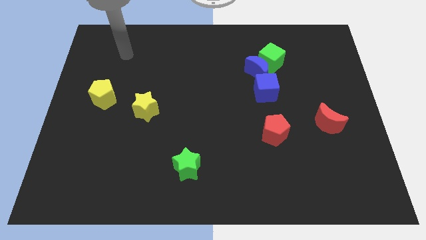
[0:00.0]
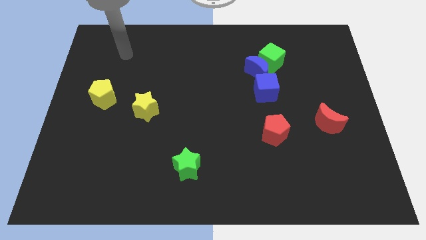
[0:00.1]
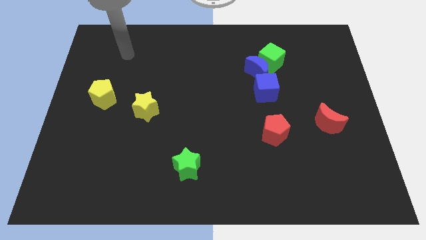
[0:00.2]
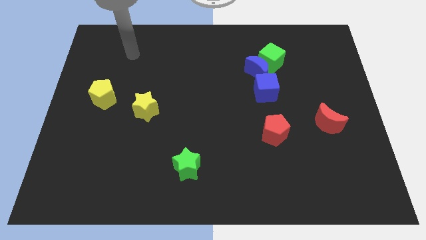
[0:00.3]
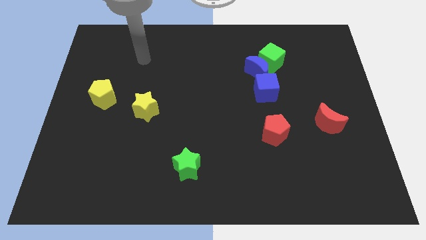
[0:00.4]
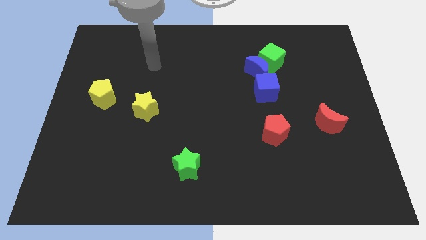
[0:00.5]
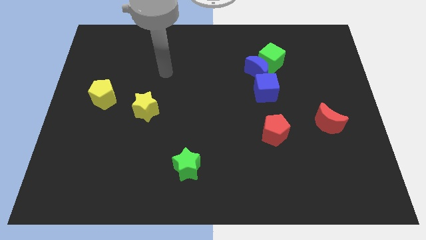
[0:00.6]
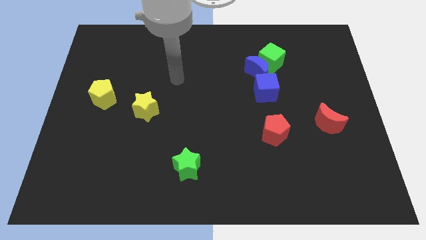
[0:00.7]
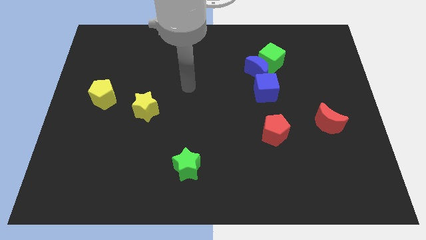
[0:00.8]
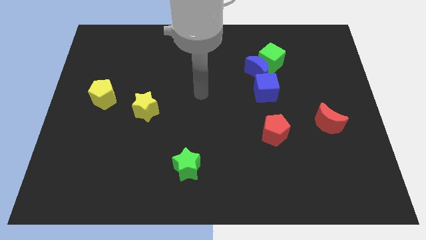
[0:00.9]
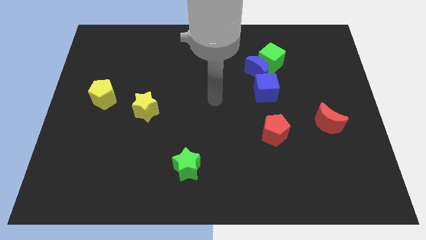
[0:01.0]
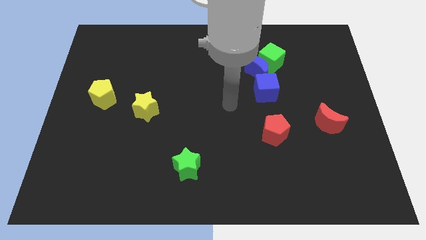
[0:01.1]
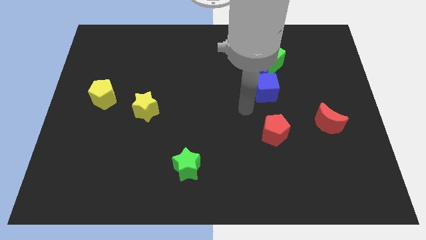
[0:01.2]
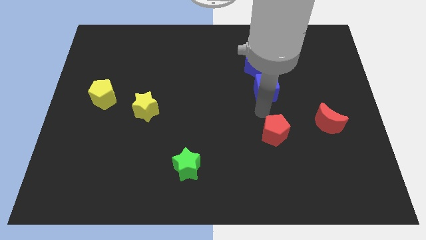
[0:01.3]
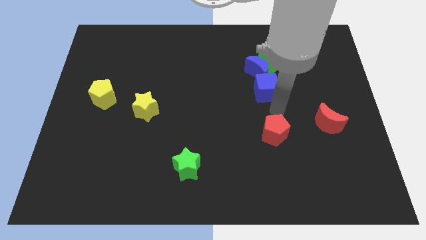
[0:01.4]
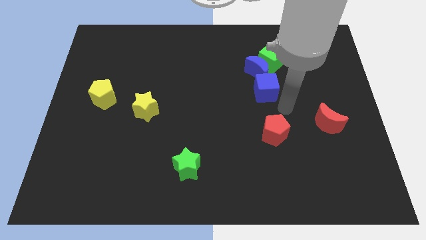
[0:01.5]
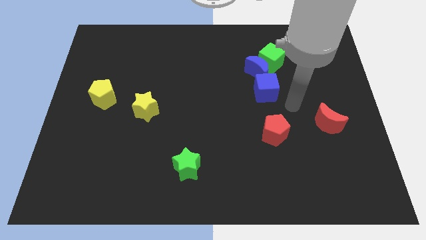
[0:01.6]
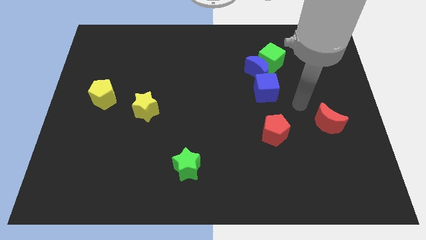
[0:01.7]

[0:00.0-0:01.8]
move the arm towards the red moon

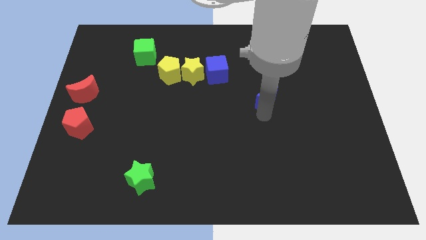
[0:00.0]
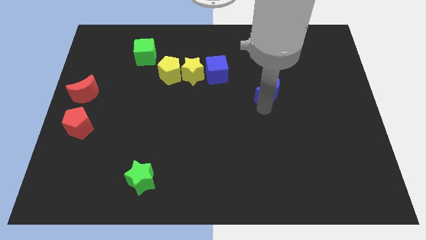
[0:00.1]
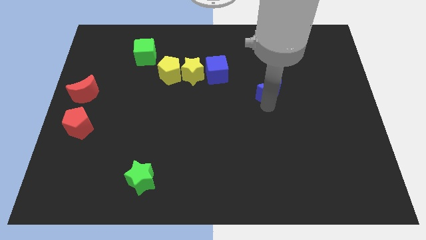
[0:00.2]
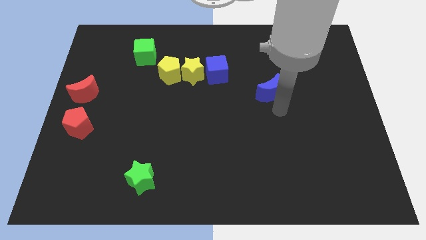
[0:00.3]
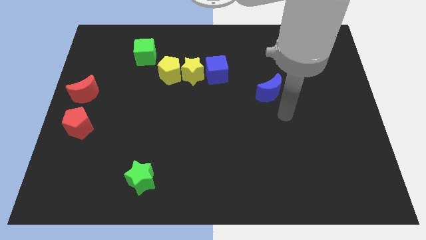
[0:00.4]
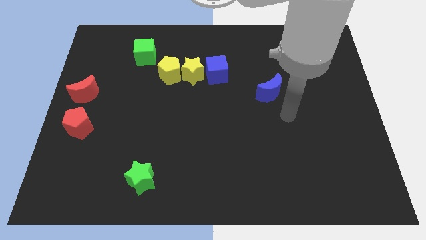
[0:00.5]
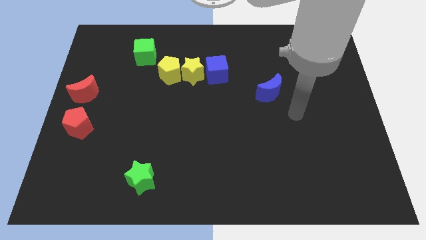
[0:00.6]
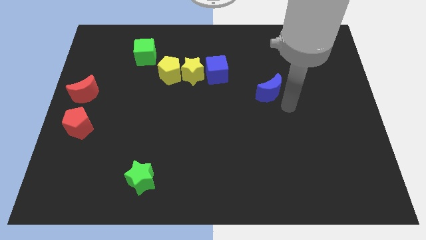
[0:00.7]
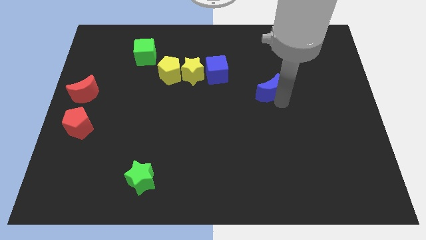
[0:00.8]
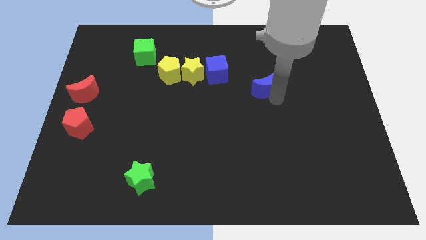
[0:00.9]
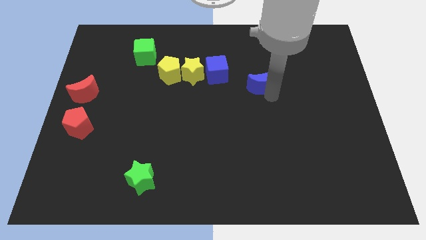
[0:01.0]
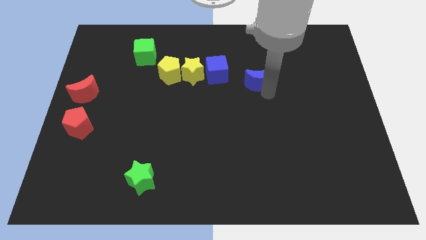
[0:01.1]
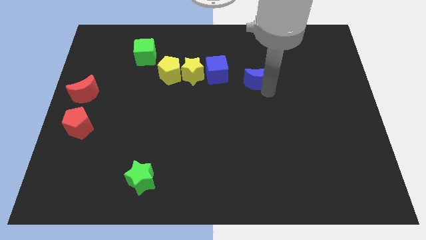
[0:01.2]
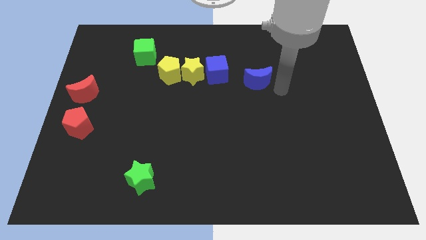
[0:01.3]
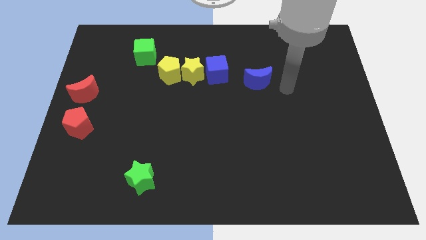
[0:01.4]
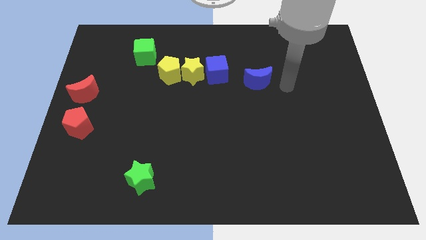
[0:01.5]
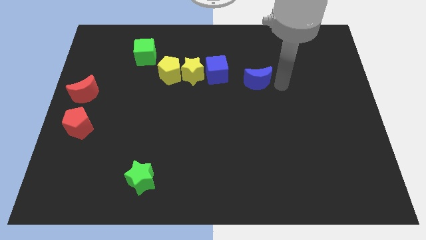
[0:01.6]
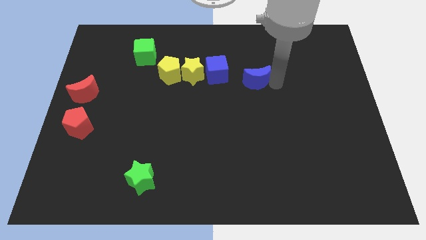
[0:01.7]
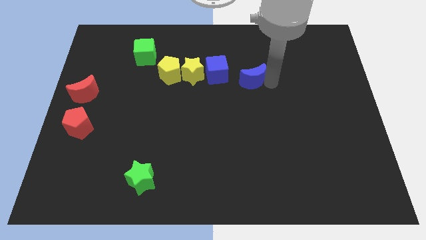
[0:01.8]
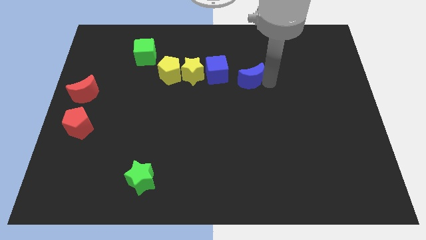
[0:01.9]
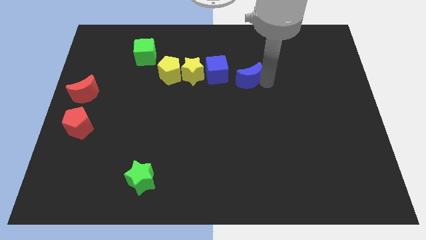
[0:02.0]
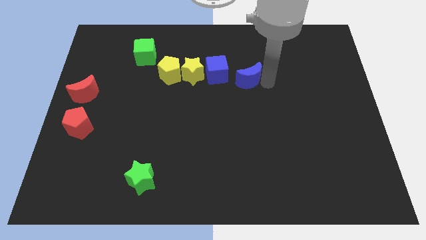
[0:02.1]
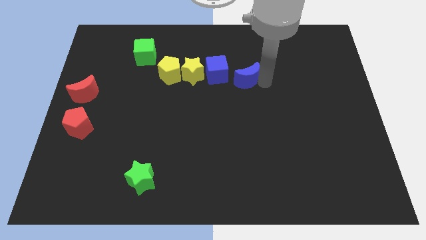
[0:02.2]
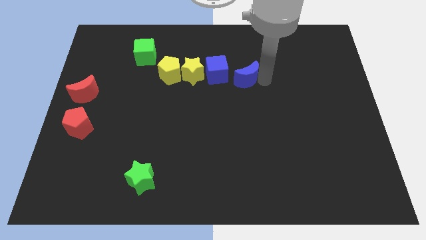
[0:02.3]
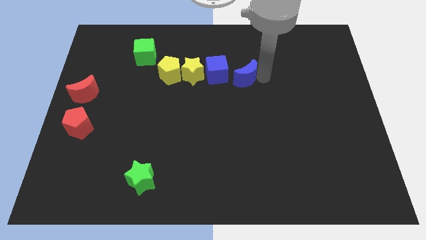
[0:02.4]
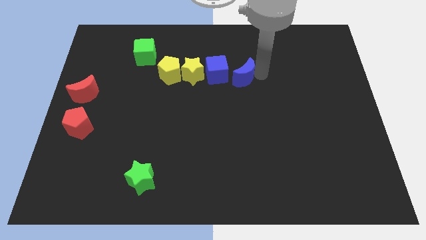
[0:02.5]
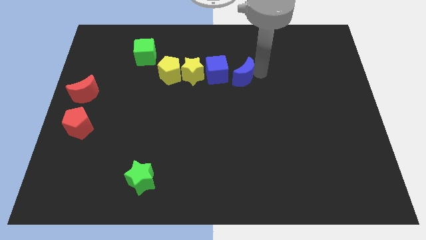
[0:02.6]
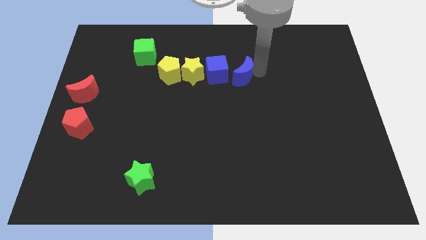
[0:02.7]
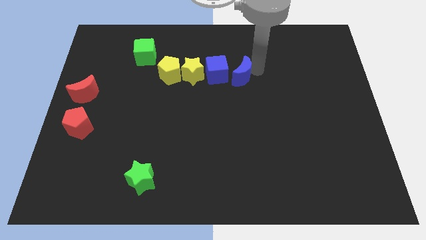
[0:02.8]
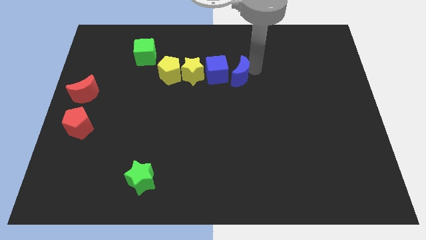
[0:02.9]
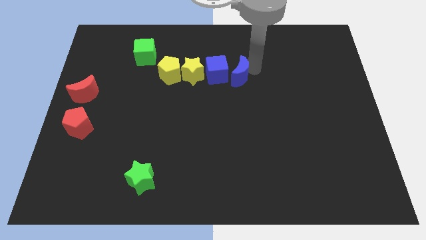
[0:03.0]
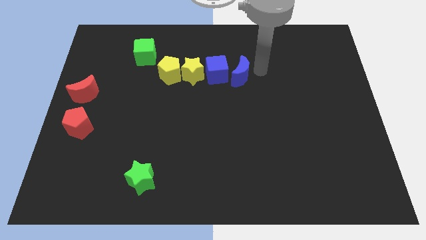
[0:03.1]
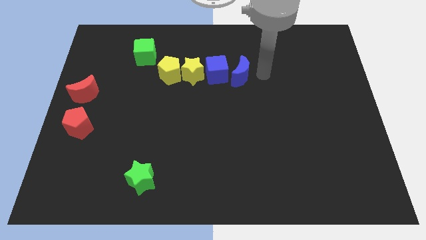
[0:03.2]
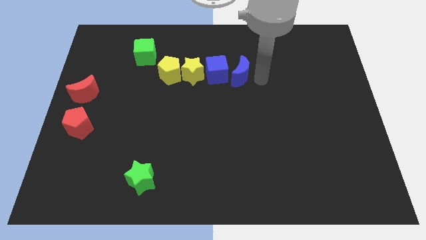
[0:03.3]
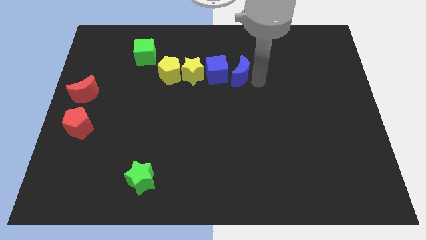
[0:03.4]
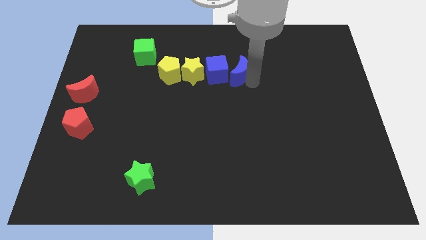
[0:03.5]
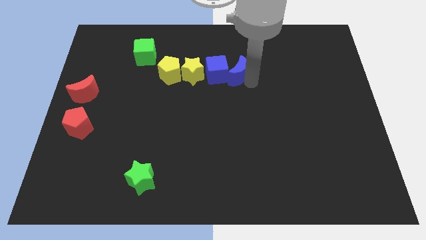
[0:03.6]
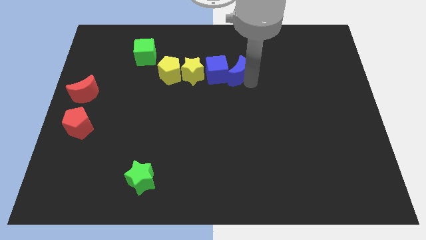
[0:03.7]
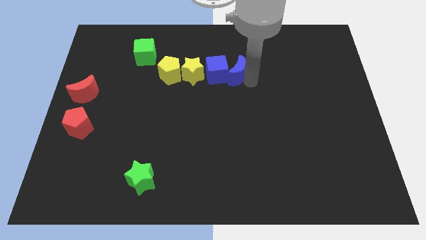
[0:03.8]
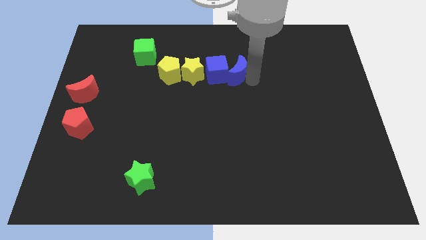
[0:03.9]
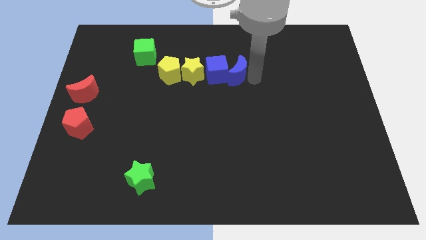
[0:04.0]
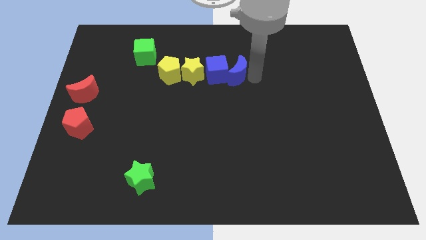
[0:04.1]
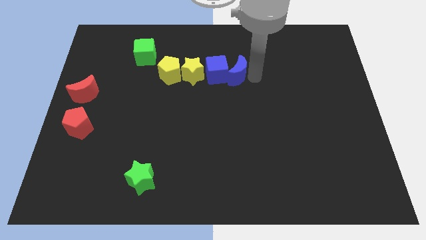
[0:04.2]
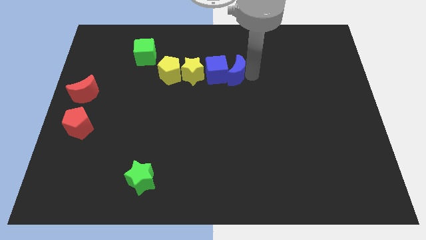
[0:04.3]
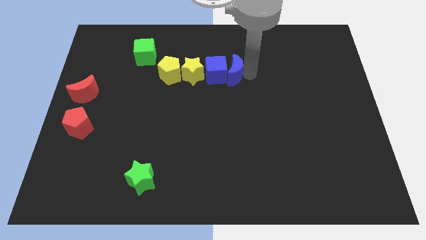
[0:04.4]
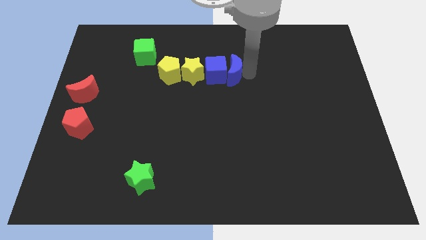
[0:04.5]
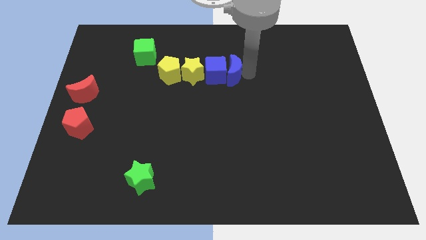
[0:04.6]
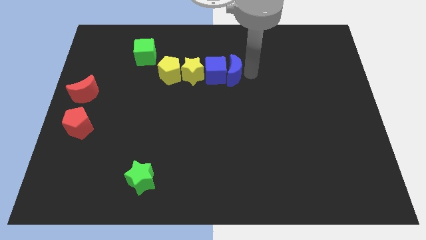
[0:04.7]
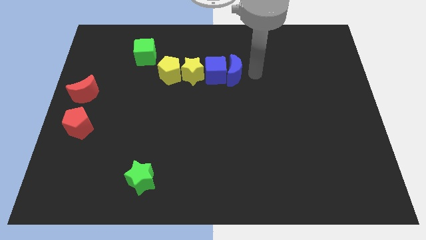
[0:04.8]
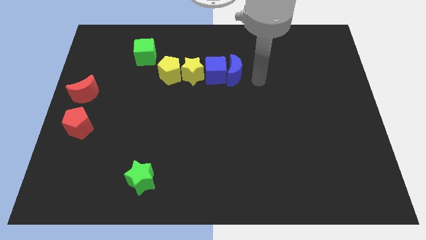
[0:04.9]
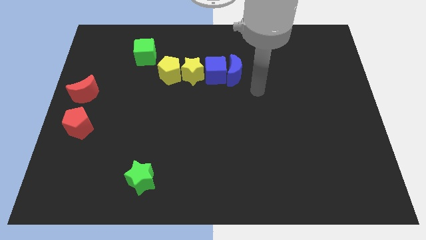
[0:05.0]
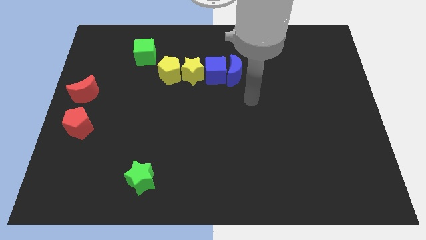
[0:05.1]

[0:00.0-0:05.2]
place the blue crescent to the right side of the blue cube

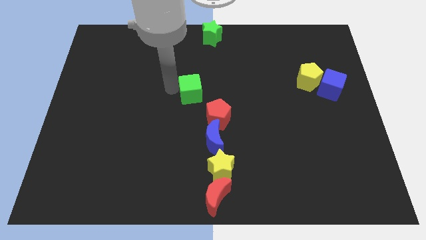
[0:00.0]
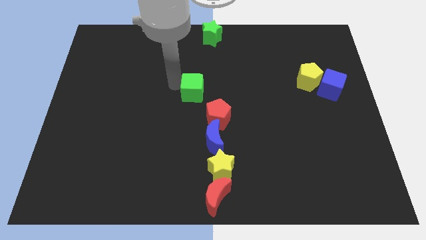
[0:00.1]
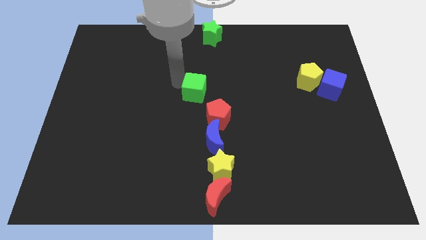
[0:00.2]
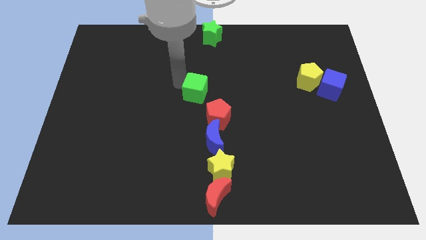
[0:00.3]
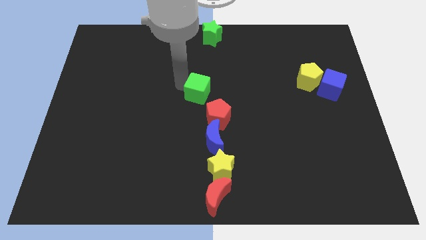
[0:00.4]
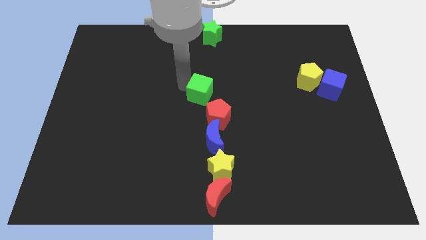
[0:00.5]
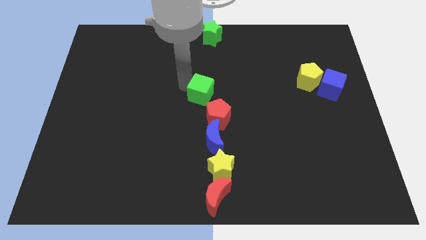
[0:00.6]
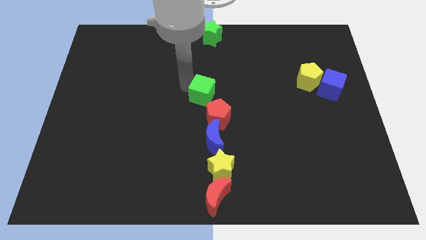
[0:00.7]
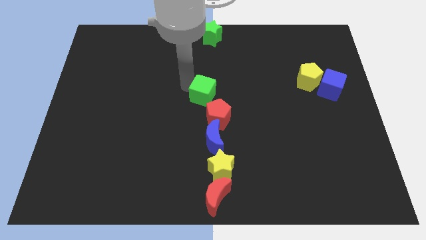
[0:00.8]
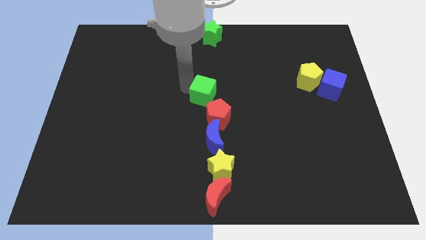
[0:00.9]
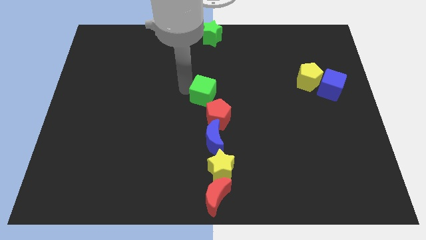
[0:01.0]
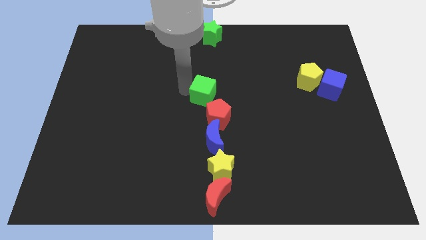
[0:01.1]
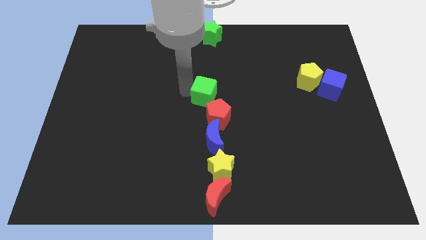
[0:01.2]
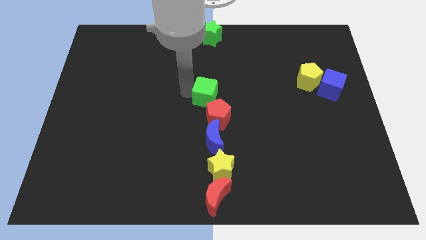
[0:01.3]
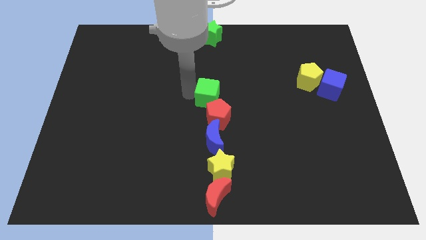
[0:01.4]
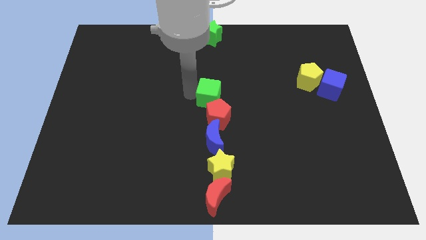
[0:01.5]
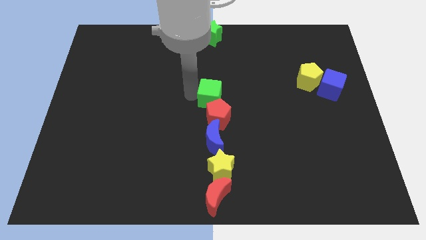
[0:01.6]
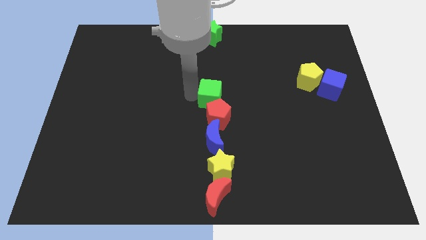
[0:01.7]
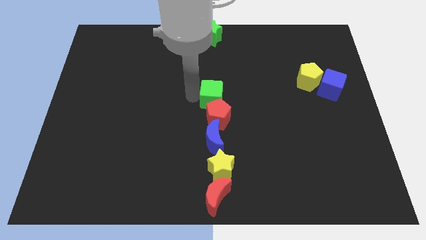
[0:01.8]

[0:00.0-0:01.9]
place the green cube above the red pentagon

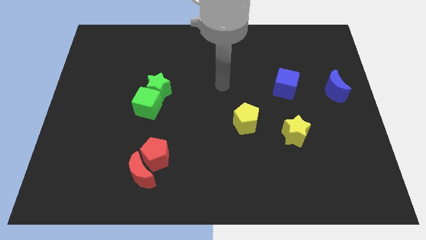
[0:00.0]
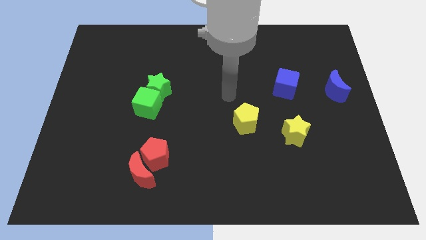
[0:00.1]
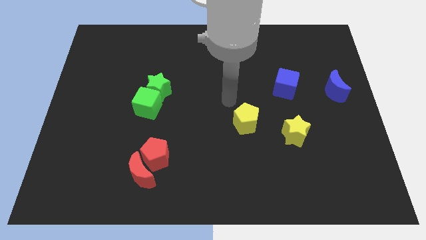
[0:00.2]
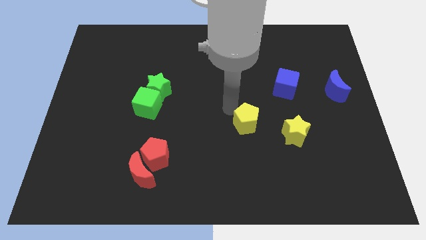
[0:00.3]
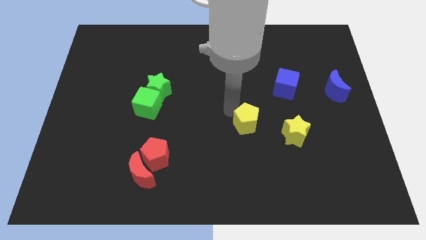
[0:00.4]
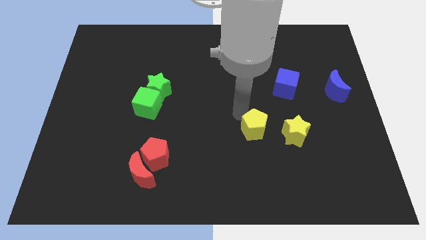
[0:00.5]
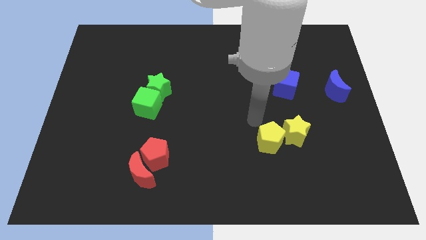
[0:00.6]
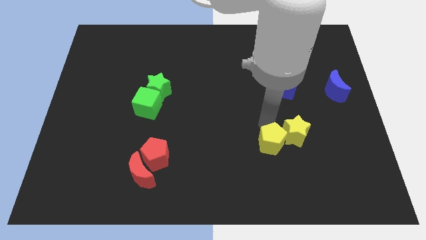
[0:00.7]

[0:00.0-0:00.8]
place the yellow pentagon left to the yellow star
